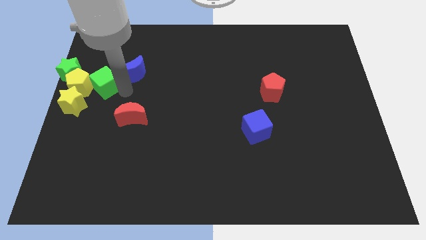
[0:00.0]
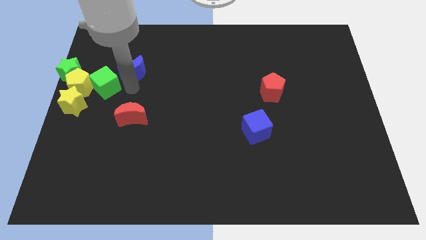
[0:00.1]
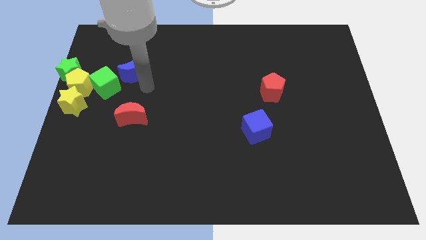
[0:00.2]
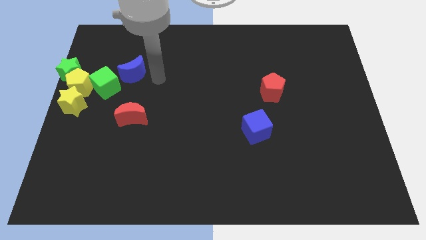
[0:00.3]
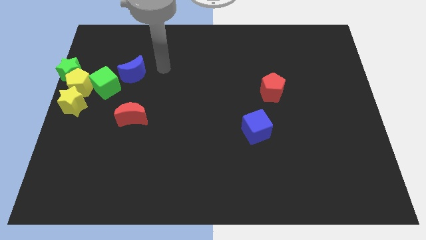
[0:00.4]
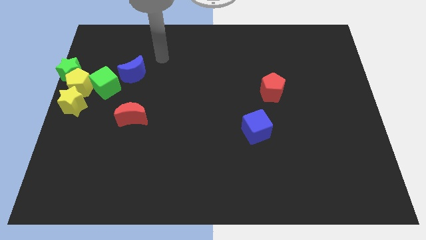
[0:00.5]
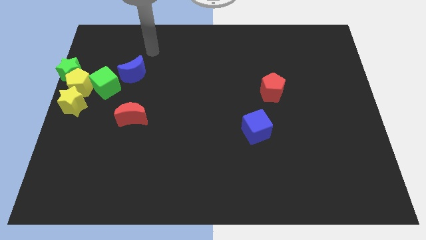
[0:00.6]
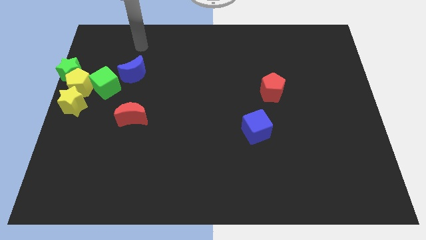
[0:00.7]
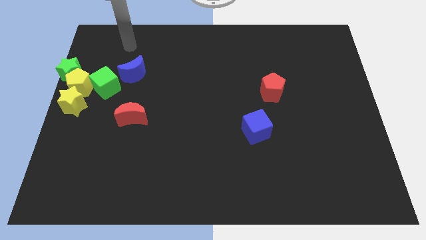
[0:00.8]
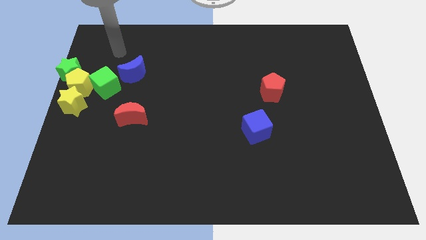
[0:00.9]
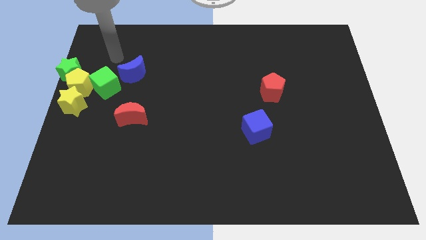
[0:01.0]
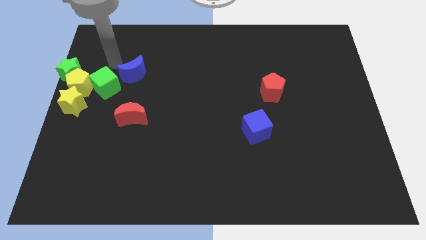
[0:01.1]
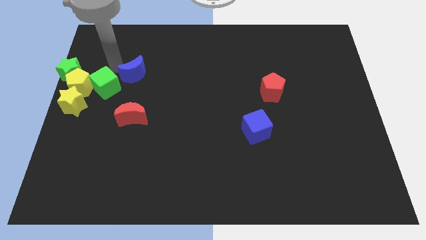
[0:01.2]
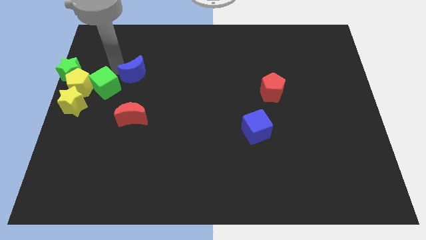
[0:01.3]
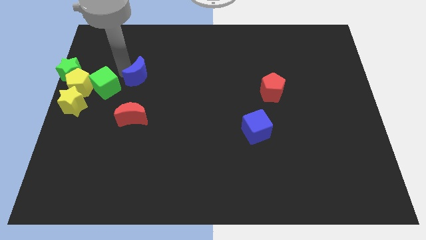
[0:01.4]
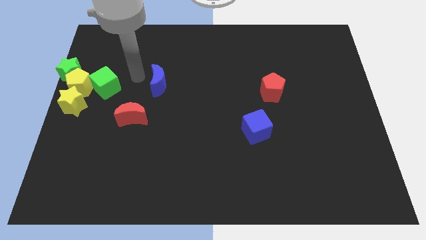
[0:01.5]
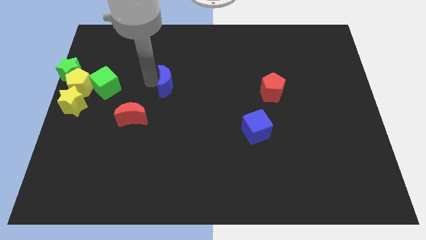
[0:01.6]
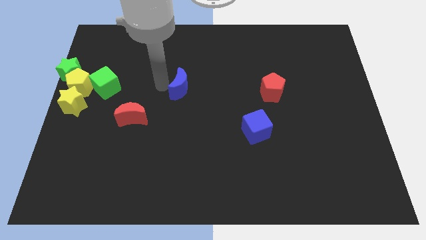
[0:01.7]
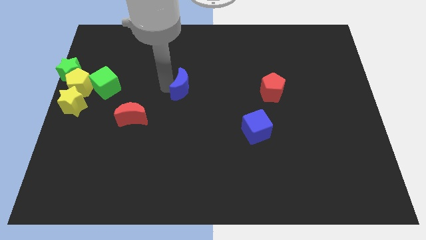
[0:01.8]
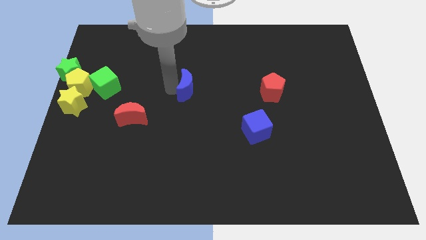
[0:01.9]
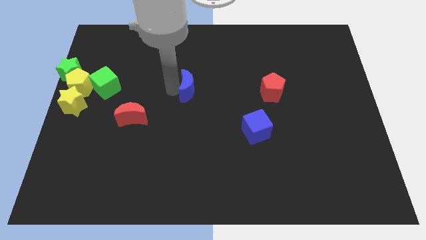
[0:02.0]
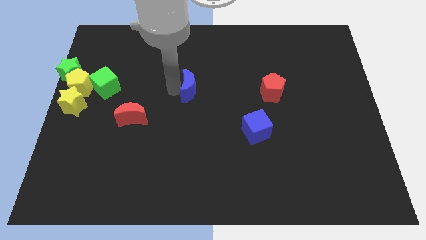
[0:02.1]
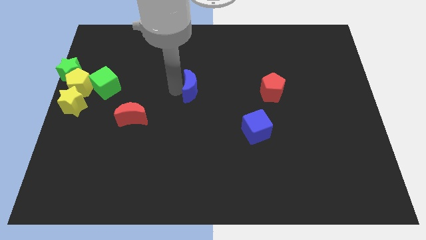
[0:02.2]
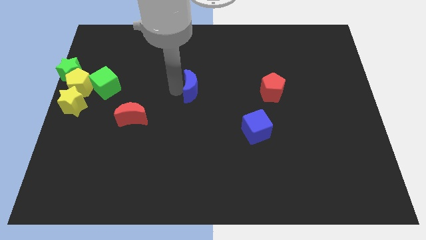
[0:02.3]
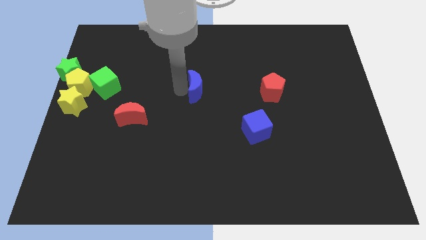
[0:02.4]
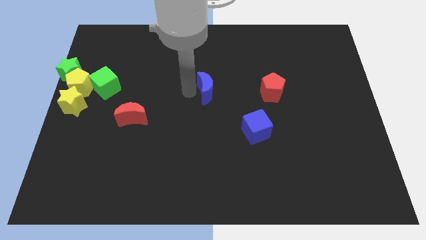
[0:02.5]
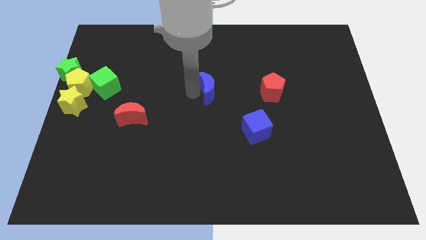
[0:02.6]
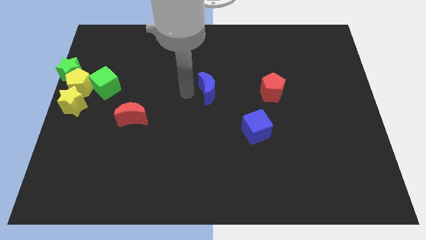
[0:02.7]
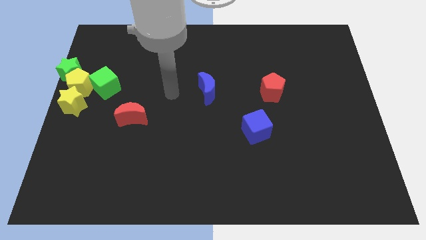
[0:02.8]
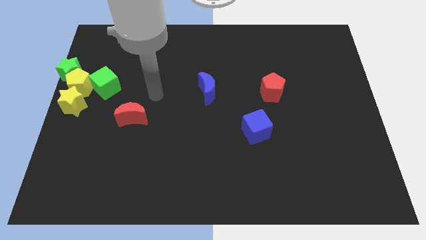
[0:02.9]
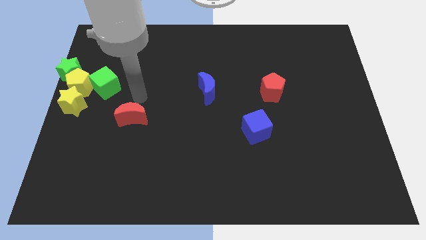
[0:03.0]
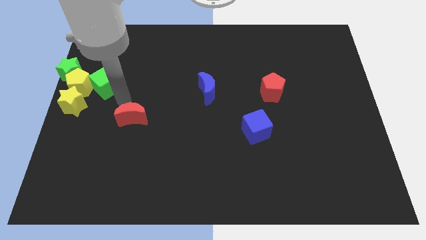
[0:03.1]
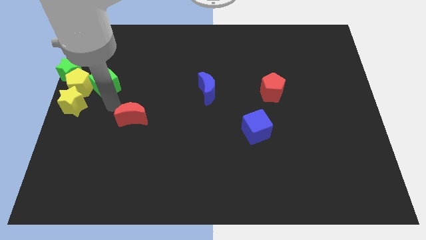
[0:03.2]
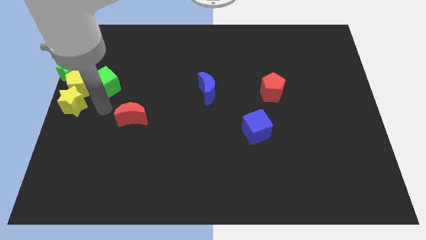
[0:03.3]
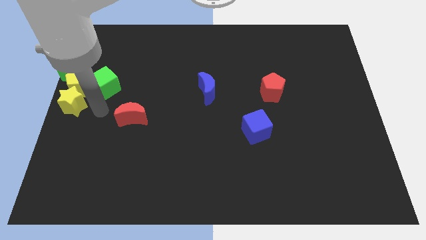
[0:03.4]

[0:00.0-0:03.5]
move blue moon to the middle of the board

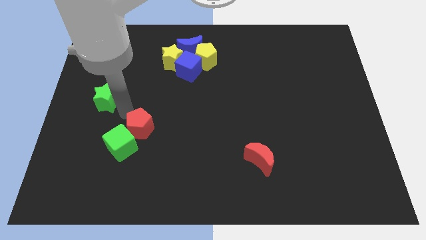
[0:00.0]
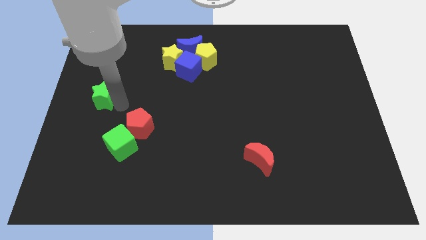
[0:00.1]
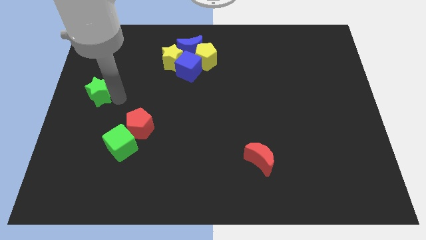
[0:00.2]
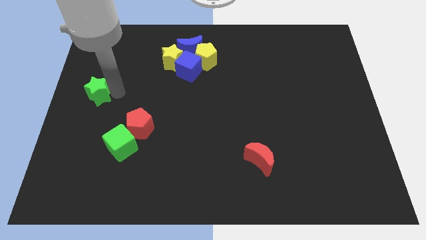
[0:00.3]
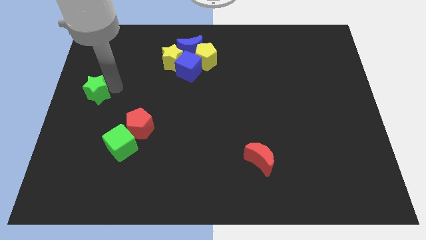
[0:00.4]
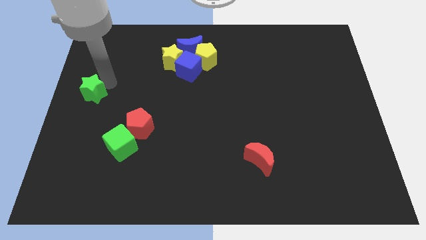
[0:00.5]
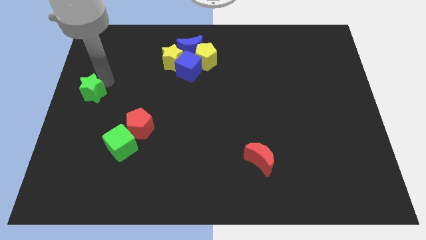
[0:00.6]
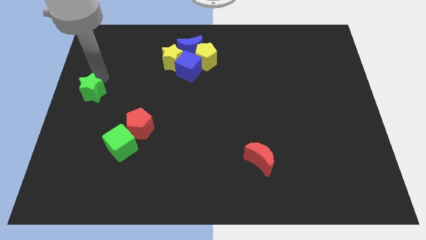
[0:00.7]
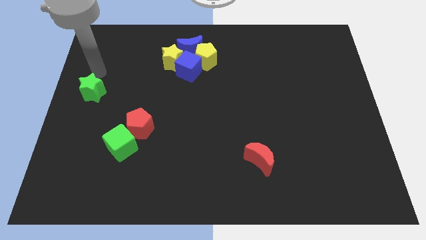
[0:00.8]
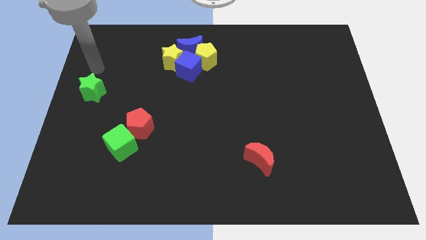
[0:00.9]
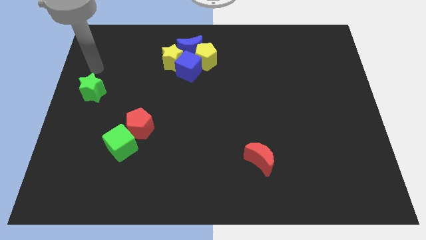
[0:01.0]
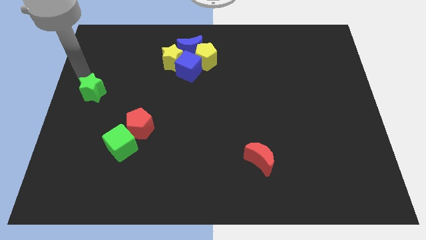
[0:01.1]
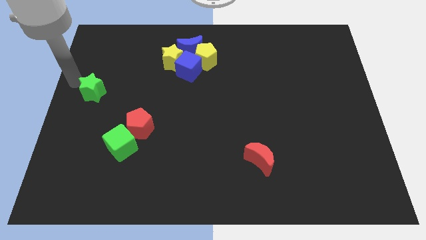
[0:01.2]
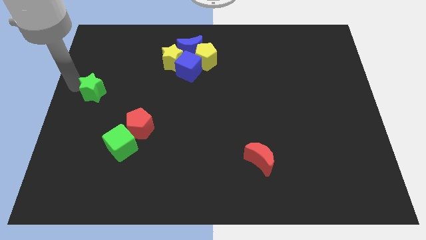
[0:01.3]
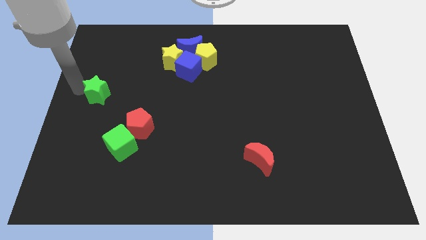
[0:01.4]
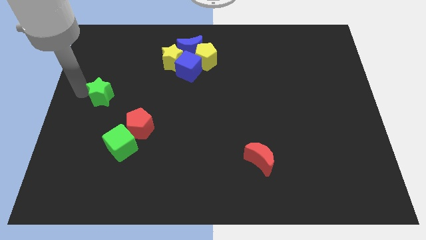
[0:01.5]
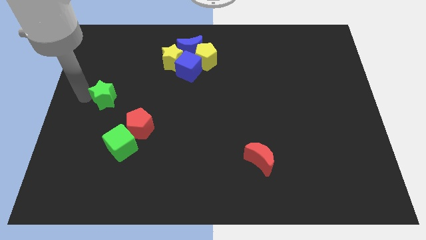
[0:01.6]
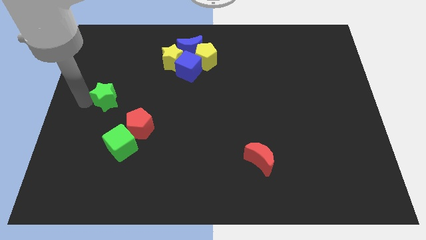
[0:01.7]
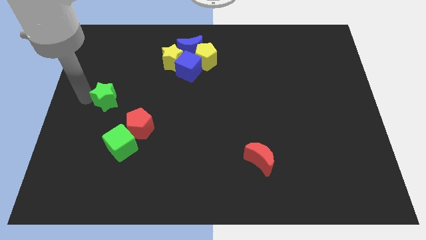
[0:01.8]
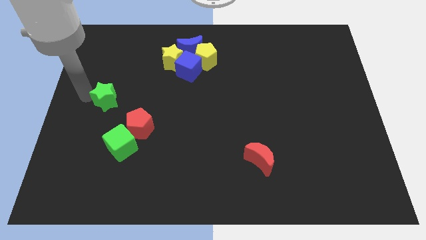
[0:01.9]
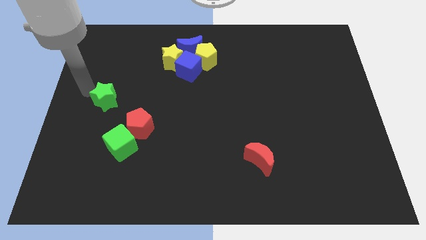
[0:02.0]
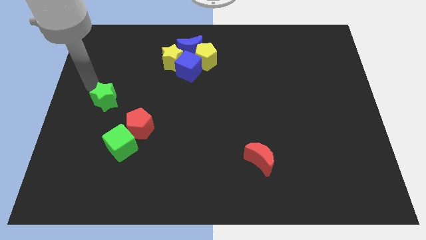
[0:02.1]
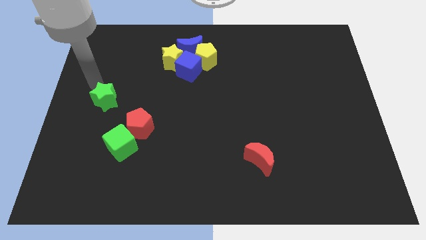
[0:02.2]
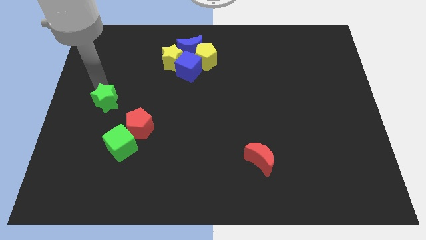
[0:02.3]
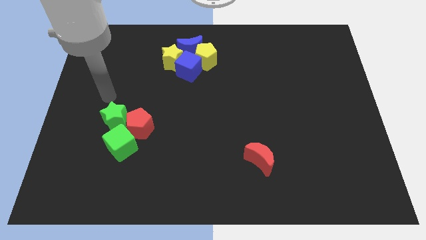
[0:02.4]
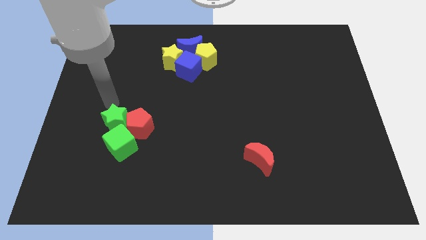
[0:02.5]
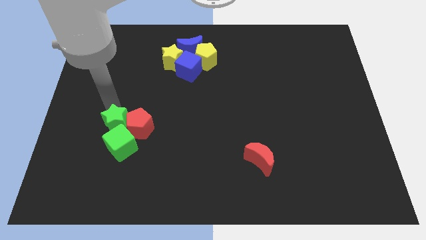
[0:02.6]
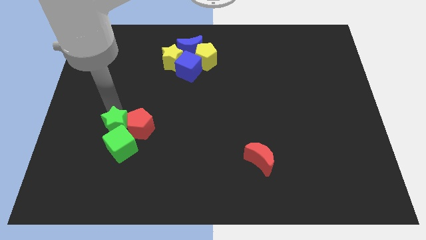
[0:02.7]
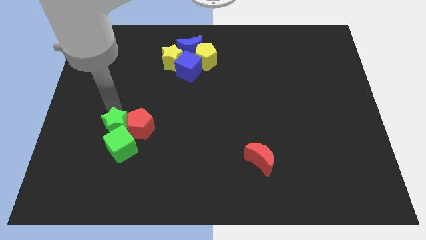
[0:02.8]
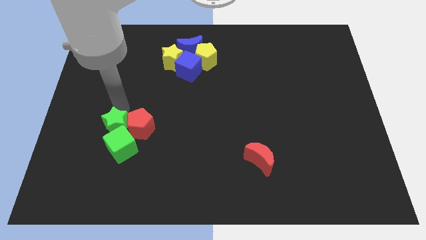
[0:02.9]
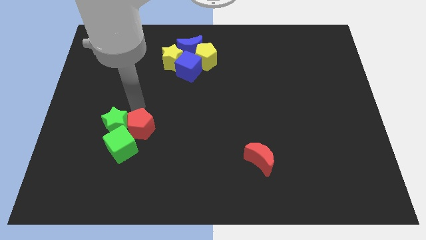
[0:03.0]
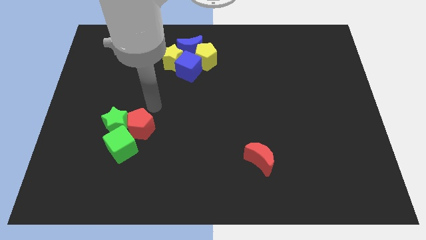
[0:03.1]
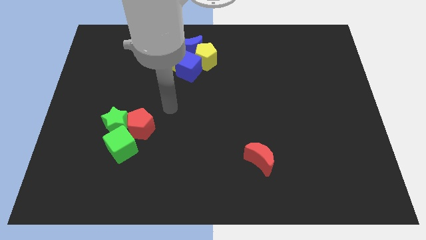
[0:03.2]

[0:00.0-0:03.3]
move green star near green cube

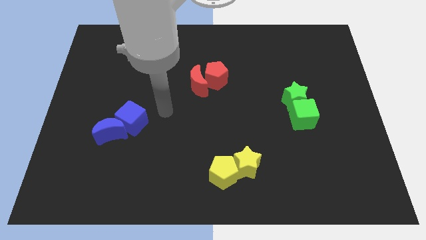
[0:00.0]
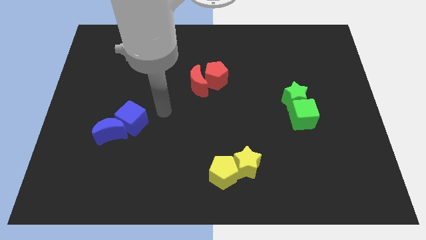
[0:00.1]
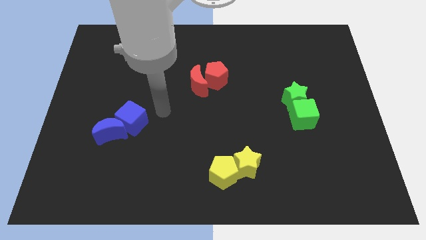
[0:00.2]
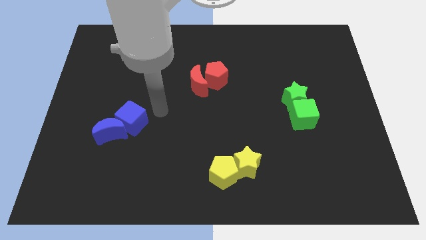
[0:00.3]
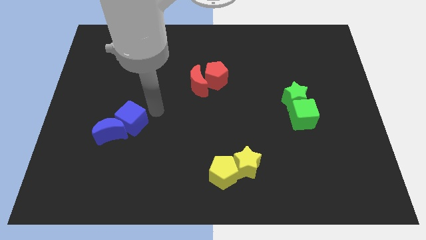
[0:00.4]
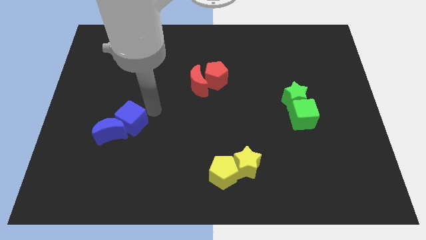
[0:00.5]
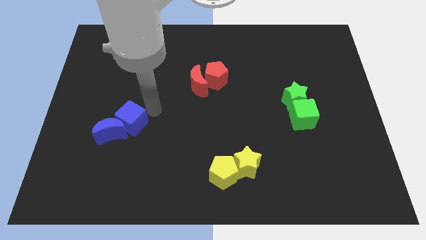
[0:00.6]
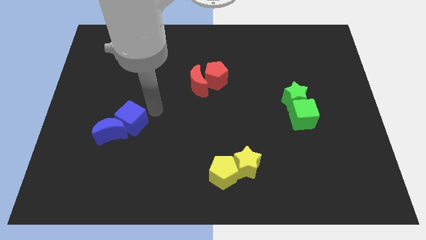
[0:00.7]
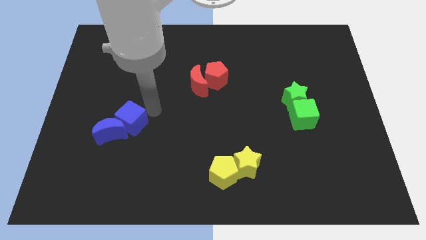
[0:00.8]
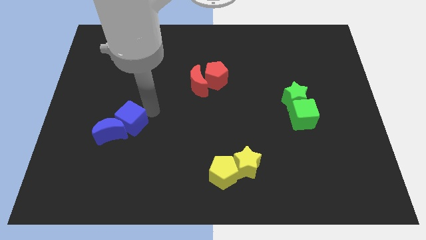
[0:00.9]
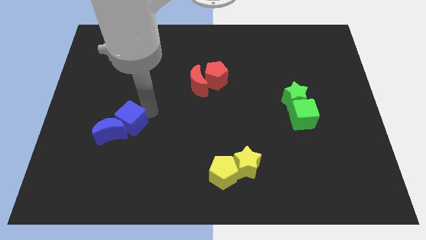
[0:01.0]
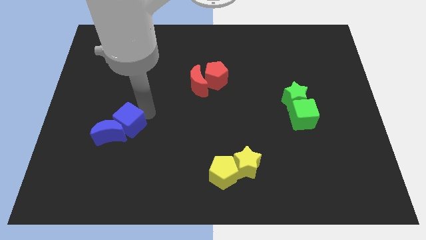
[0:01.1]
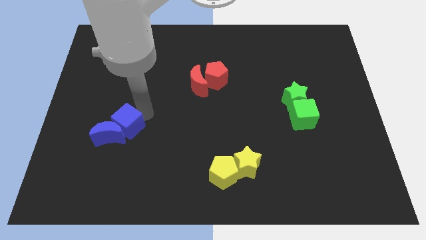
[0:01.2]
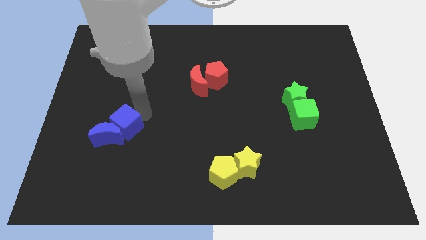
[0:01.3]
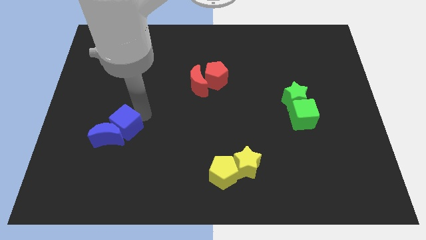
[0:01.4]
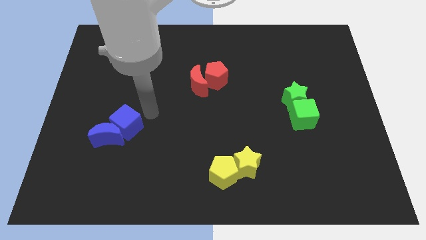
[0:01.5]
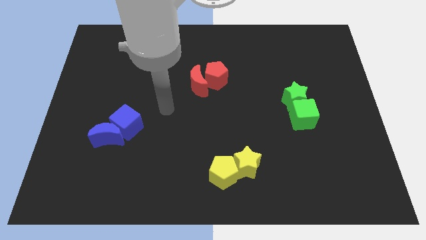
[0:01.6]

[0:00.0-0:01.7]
move the blue cube into the blue crescent

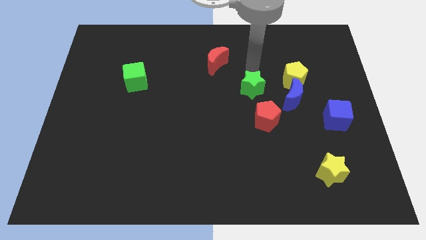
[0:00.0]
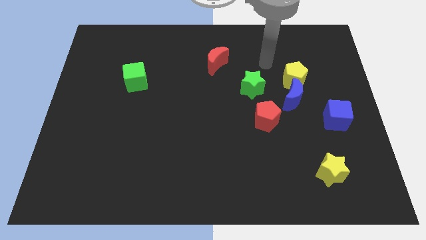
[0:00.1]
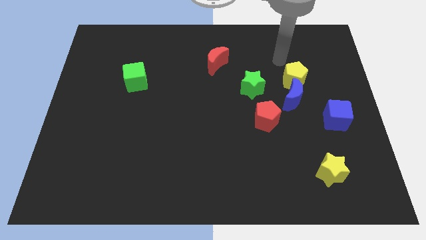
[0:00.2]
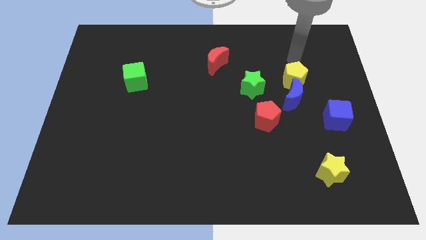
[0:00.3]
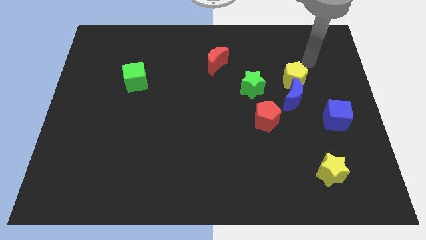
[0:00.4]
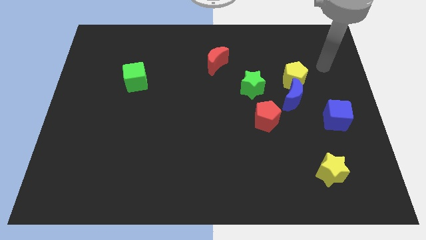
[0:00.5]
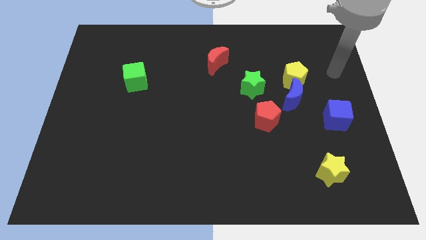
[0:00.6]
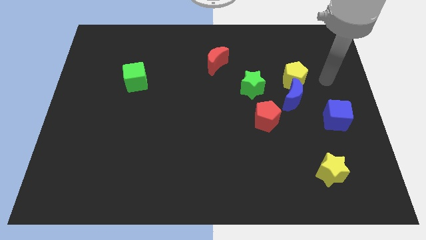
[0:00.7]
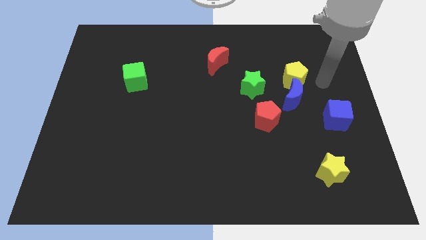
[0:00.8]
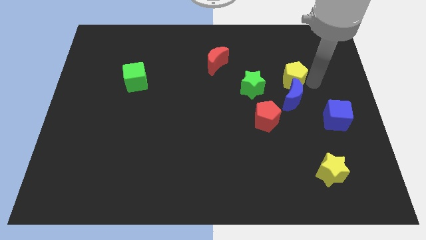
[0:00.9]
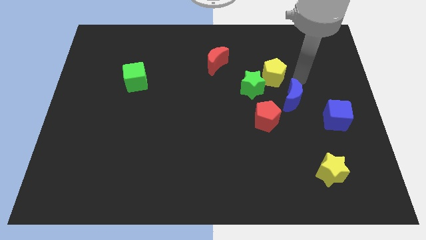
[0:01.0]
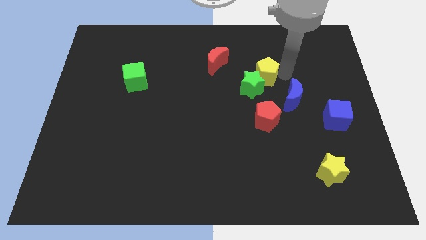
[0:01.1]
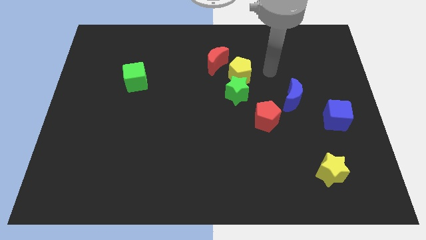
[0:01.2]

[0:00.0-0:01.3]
push the yellow pentagon into the green star
